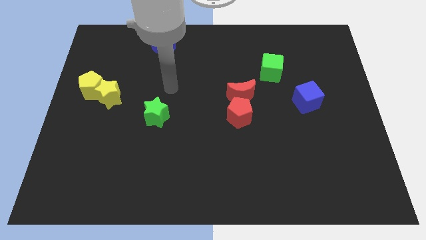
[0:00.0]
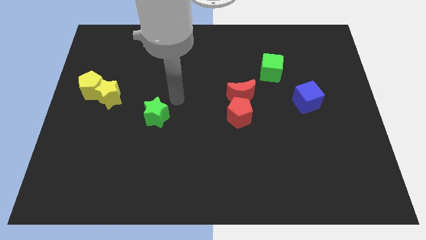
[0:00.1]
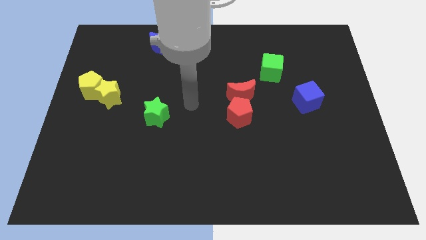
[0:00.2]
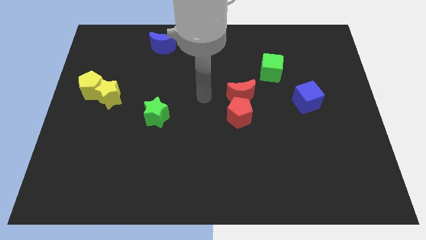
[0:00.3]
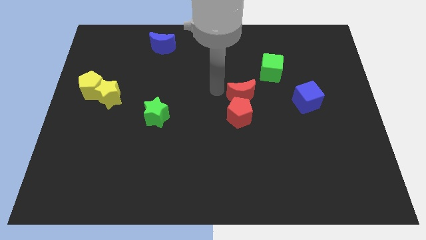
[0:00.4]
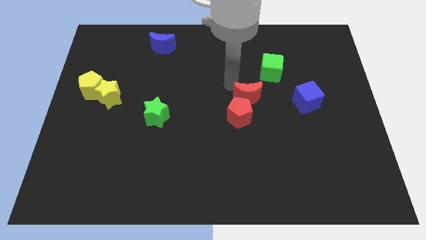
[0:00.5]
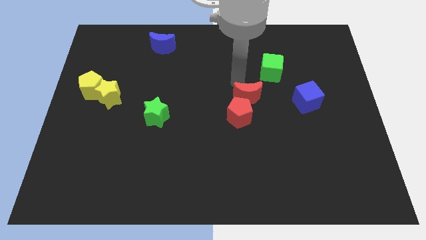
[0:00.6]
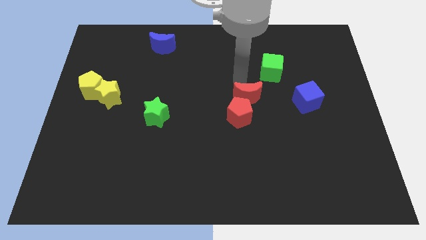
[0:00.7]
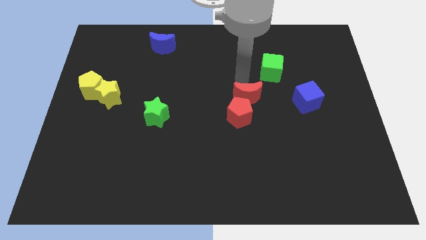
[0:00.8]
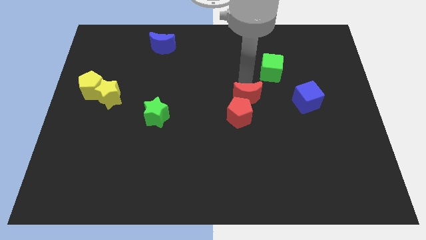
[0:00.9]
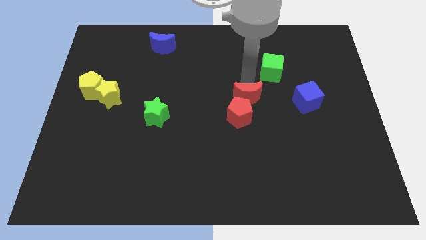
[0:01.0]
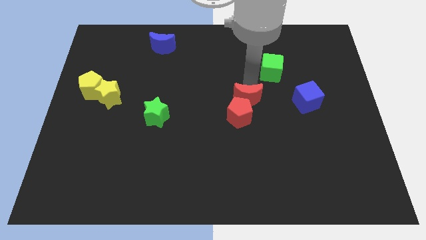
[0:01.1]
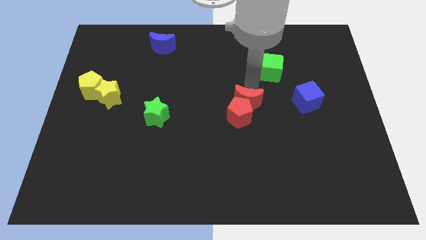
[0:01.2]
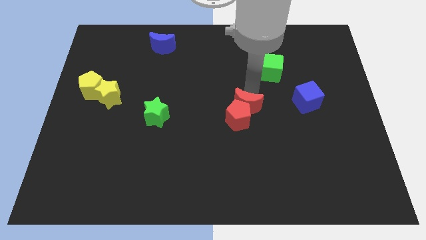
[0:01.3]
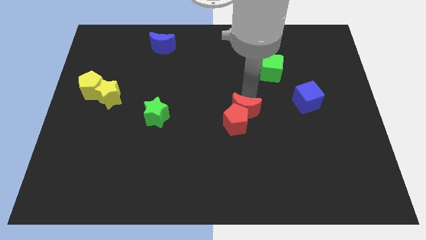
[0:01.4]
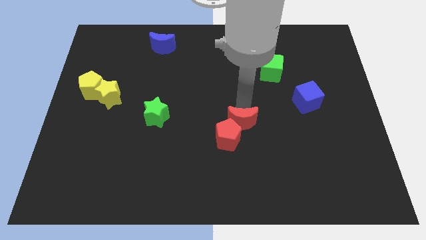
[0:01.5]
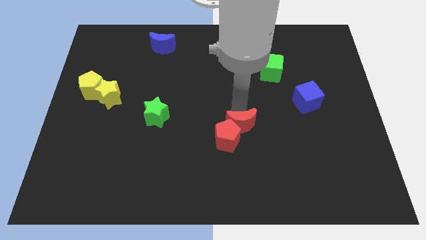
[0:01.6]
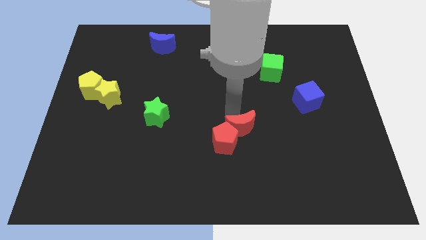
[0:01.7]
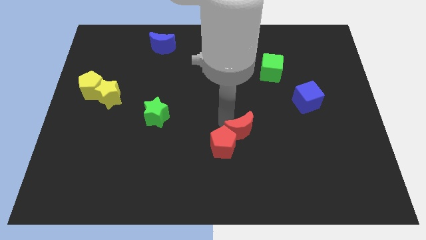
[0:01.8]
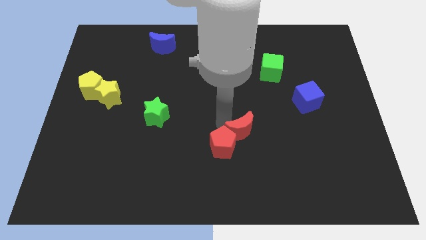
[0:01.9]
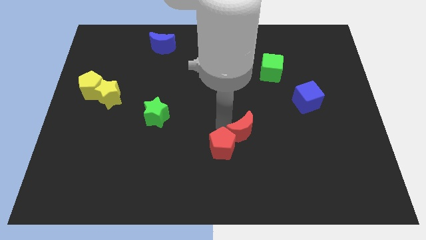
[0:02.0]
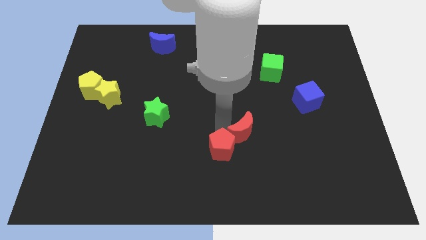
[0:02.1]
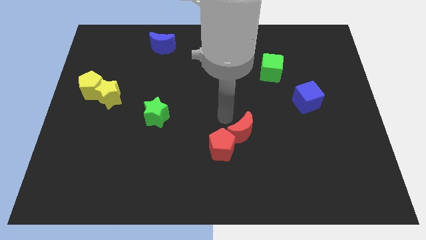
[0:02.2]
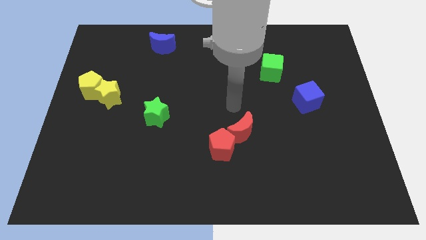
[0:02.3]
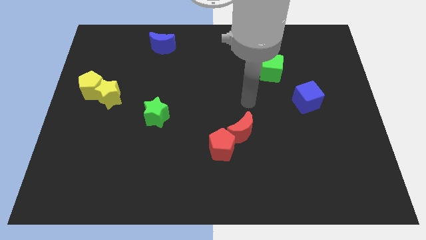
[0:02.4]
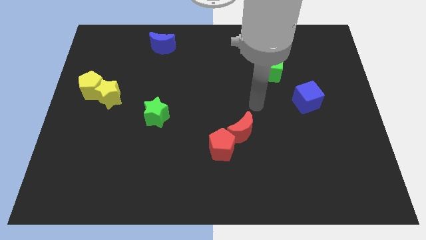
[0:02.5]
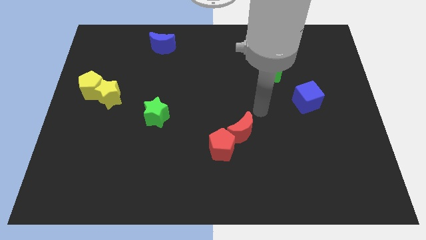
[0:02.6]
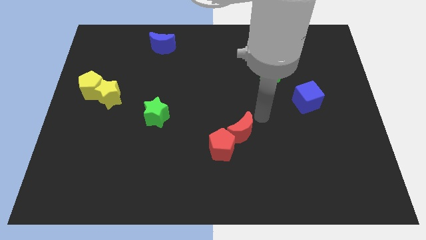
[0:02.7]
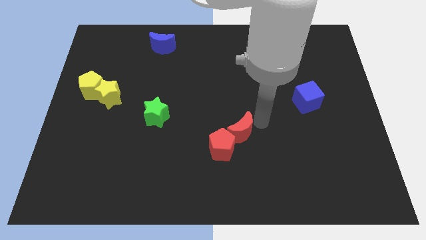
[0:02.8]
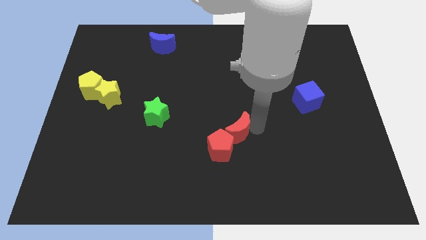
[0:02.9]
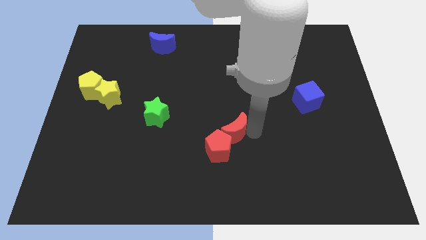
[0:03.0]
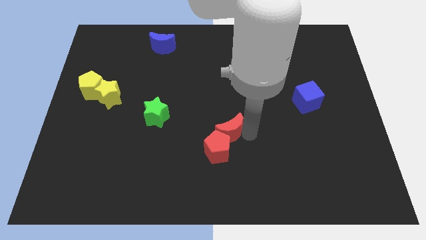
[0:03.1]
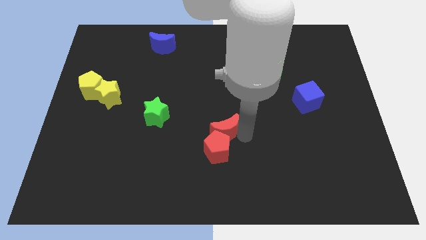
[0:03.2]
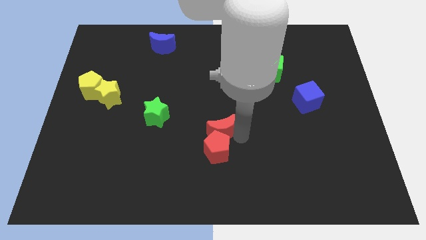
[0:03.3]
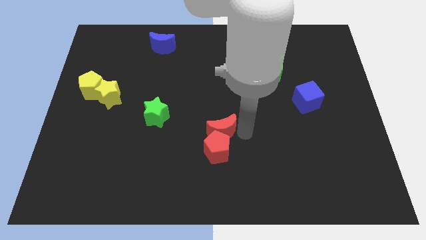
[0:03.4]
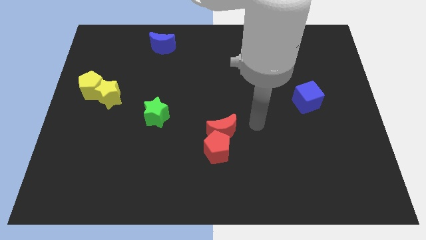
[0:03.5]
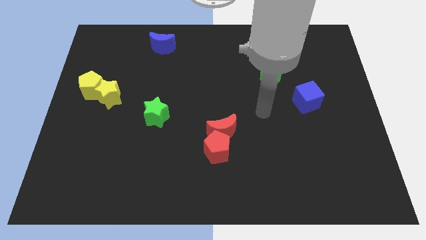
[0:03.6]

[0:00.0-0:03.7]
push the red crescent along with pentagon towards bottom

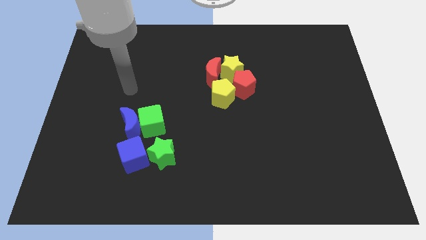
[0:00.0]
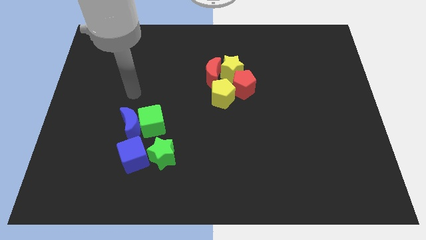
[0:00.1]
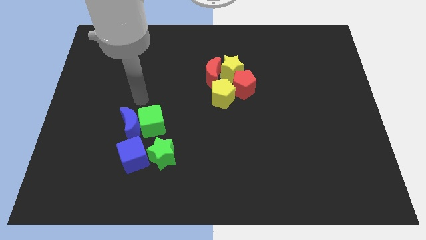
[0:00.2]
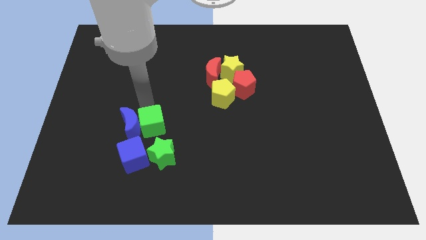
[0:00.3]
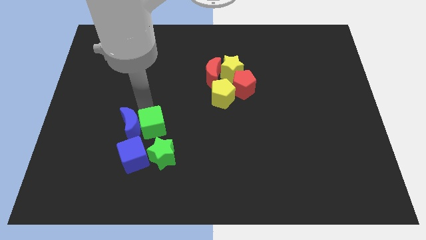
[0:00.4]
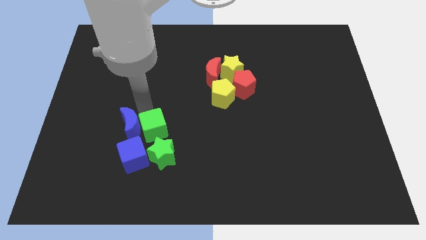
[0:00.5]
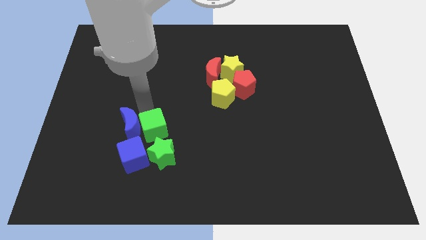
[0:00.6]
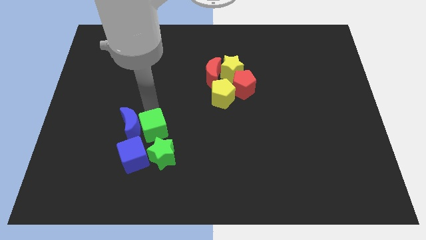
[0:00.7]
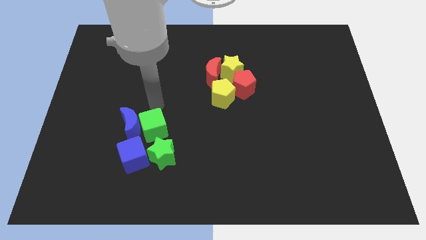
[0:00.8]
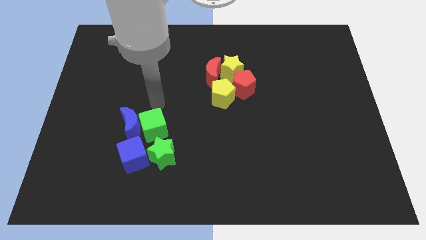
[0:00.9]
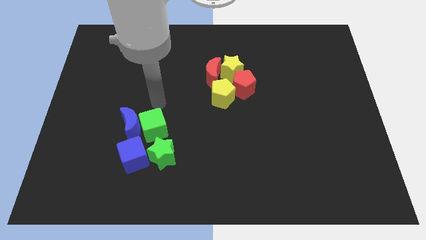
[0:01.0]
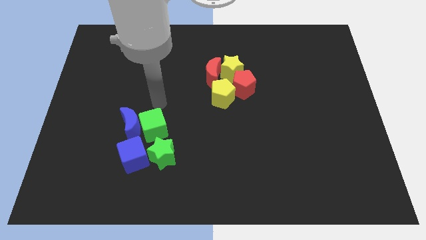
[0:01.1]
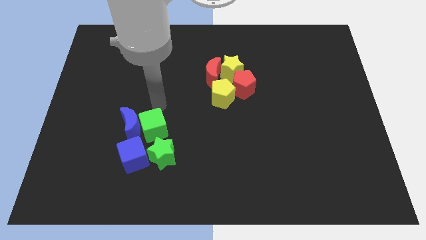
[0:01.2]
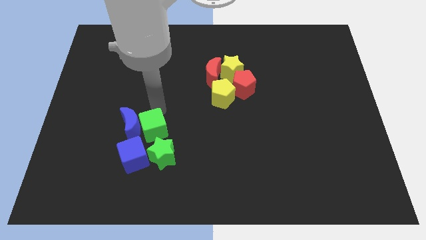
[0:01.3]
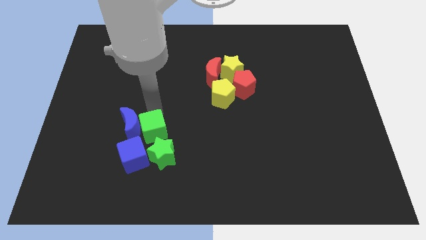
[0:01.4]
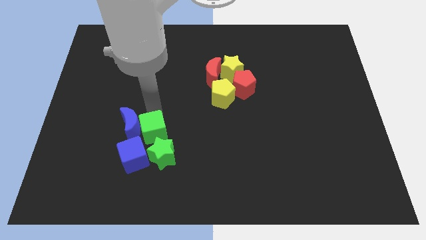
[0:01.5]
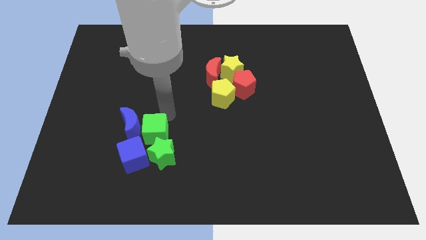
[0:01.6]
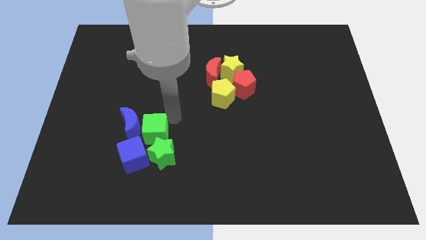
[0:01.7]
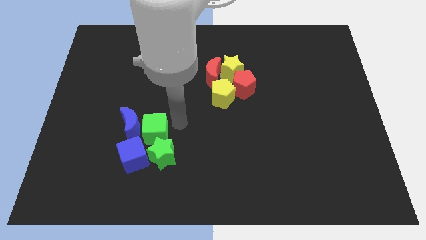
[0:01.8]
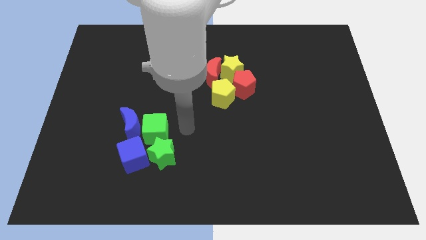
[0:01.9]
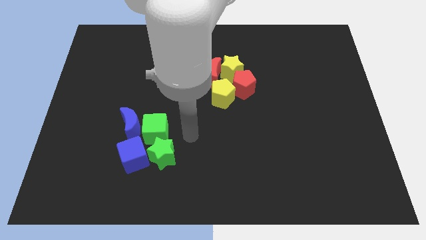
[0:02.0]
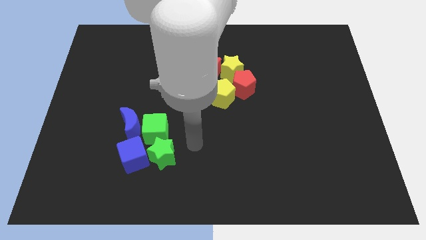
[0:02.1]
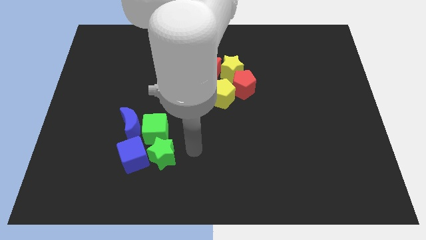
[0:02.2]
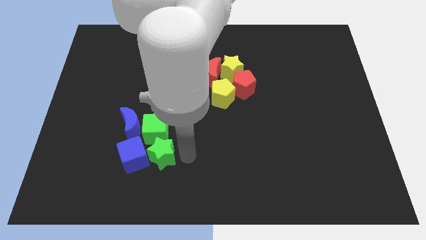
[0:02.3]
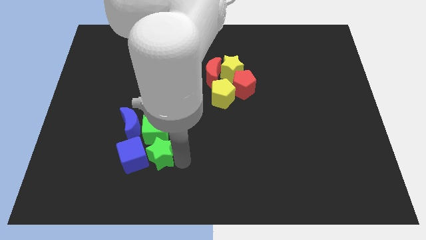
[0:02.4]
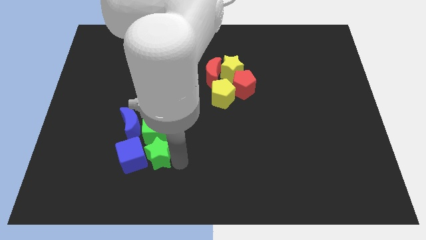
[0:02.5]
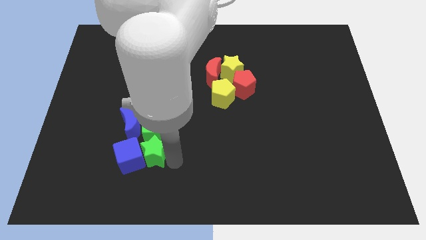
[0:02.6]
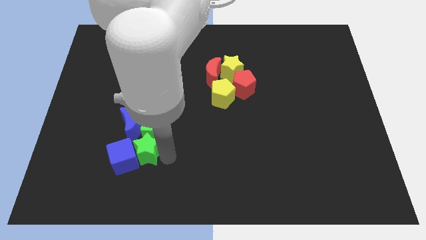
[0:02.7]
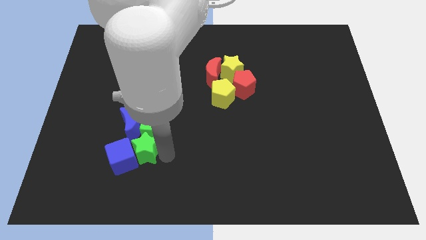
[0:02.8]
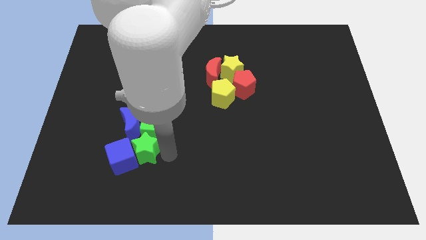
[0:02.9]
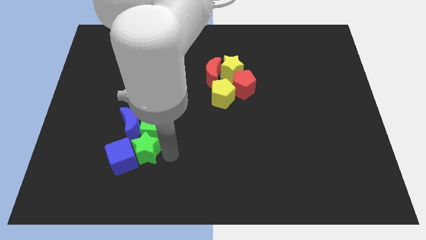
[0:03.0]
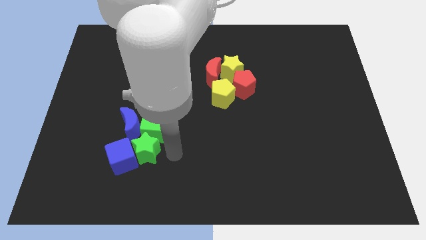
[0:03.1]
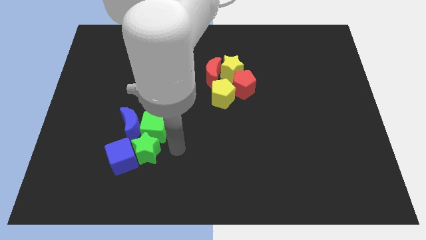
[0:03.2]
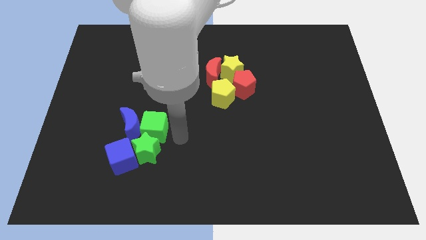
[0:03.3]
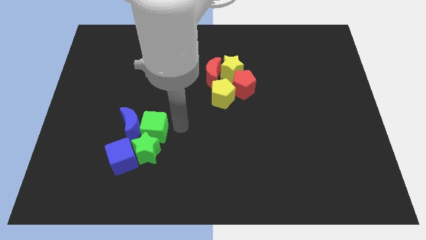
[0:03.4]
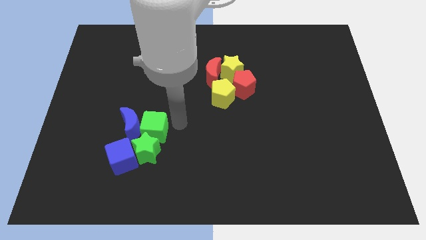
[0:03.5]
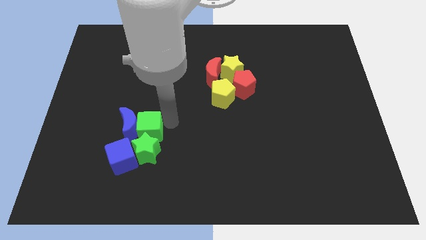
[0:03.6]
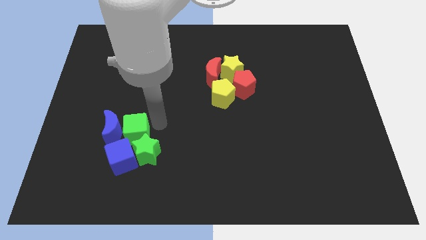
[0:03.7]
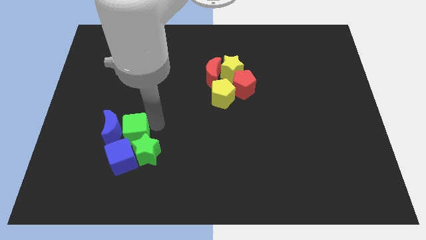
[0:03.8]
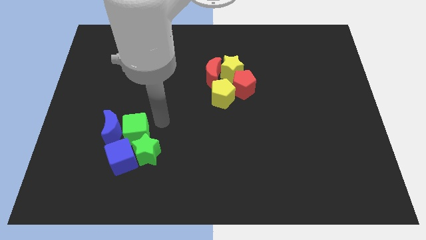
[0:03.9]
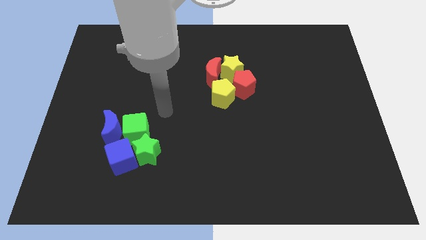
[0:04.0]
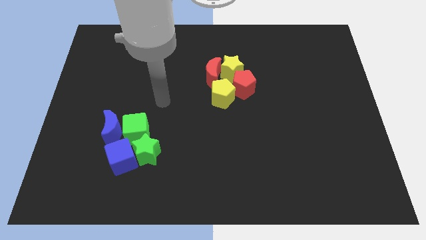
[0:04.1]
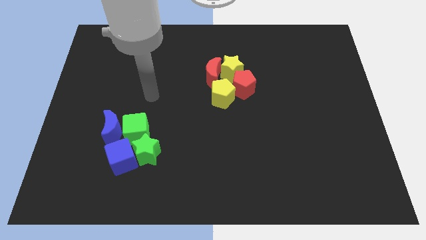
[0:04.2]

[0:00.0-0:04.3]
push the green cube and the gree star slightly left

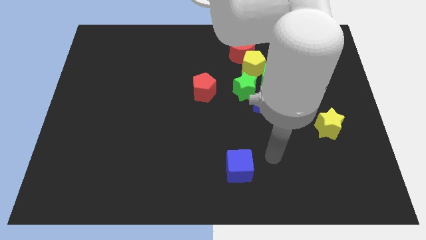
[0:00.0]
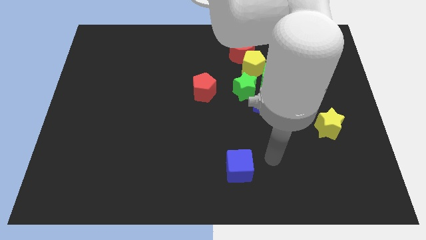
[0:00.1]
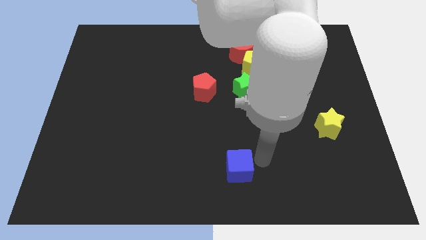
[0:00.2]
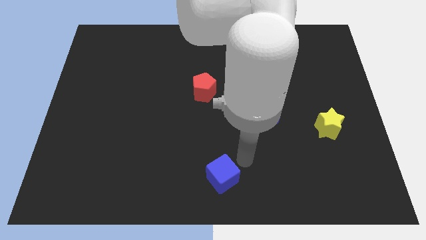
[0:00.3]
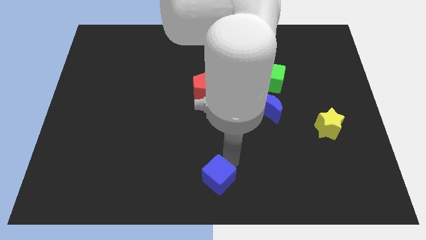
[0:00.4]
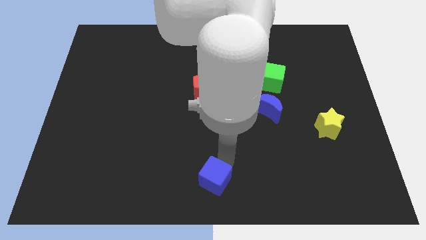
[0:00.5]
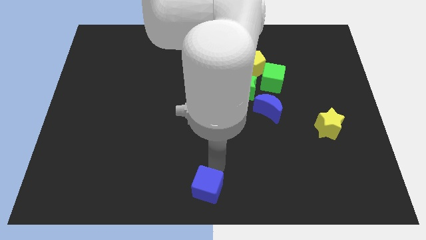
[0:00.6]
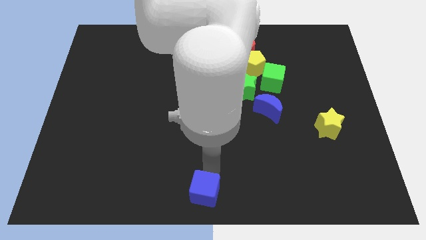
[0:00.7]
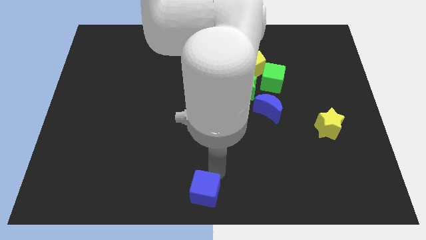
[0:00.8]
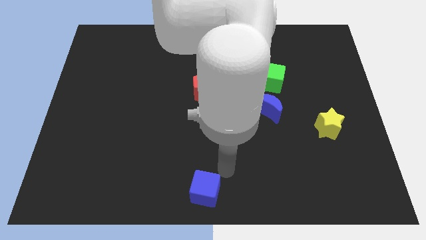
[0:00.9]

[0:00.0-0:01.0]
move blue cube at the center bottom

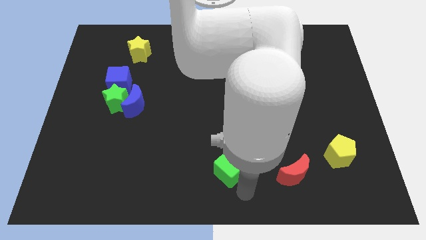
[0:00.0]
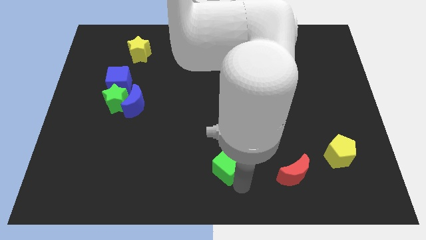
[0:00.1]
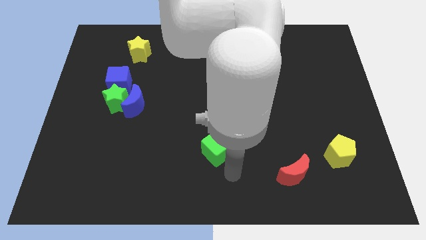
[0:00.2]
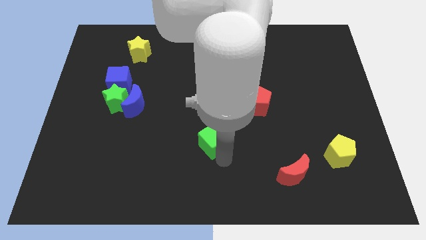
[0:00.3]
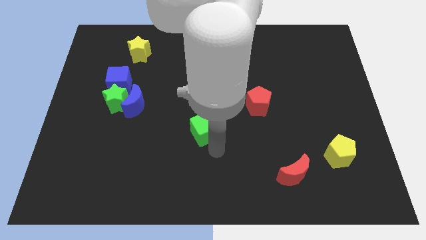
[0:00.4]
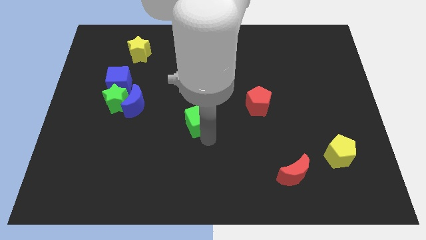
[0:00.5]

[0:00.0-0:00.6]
push green cube slightly upwards
